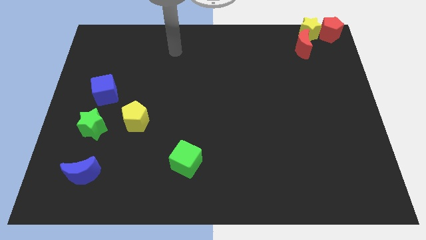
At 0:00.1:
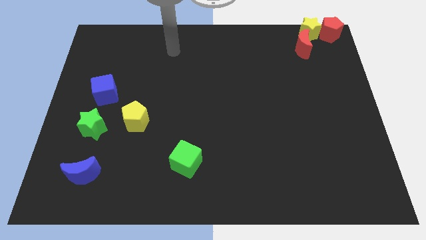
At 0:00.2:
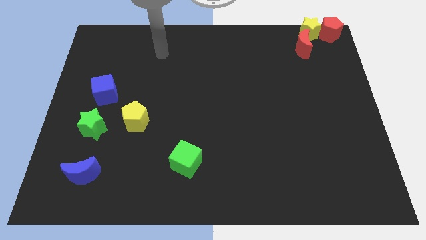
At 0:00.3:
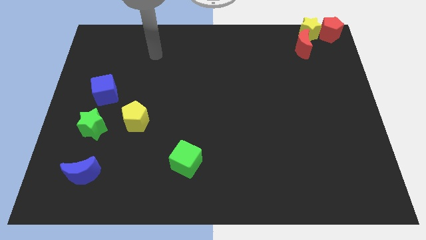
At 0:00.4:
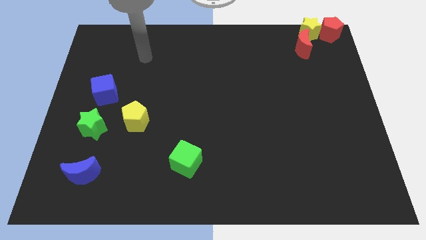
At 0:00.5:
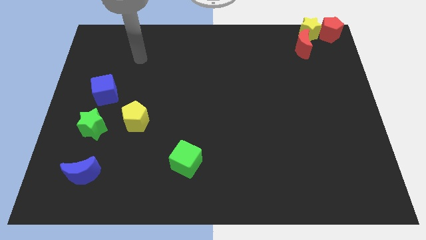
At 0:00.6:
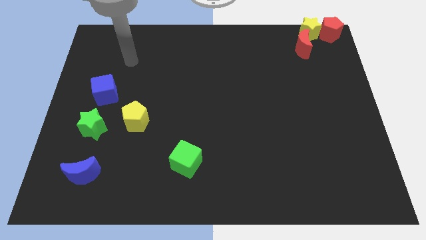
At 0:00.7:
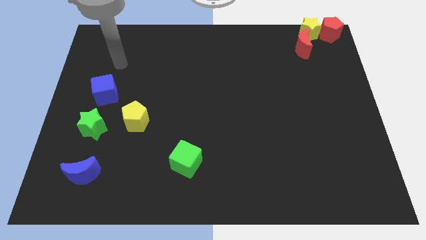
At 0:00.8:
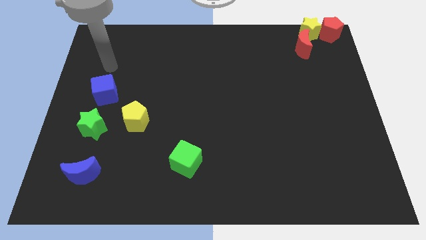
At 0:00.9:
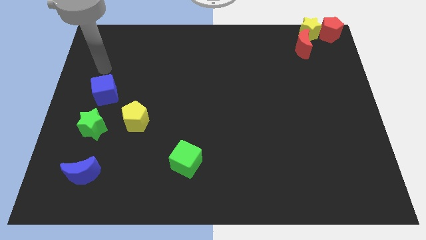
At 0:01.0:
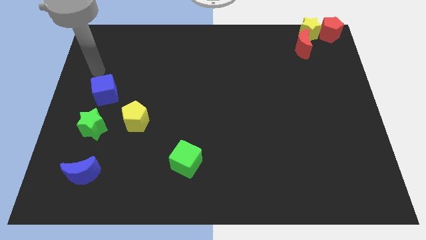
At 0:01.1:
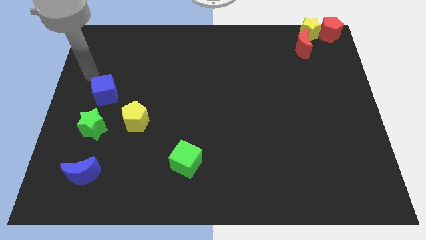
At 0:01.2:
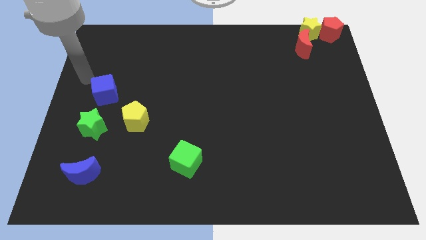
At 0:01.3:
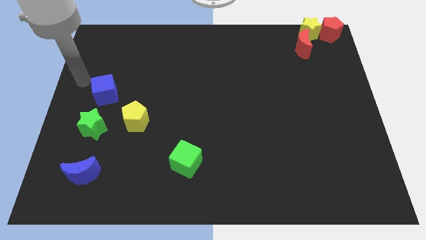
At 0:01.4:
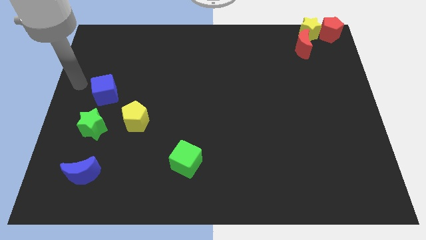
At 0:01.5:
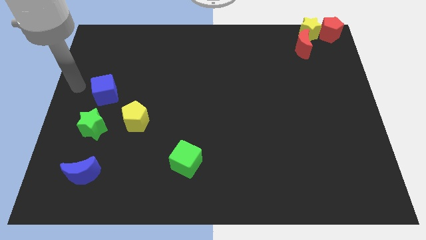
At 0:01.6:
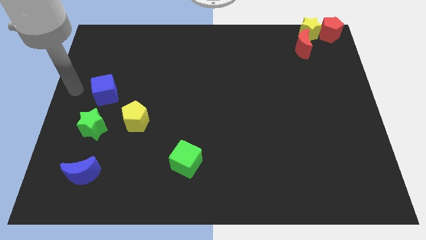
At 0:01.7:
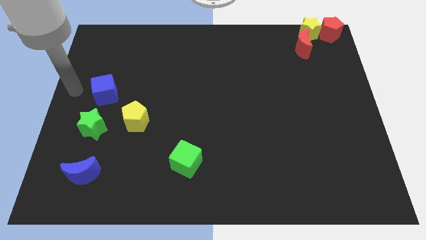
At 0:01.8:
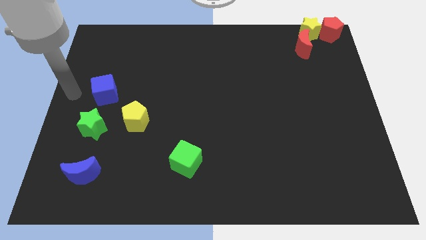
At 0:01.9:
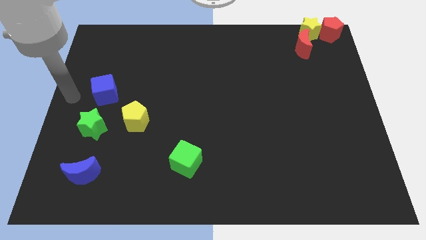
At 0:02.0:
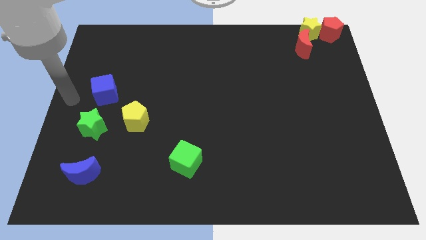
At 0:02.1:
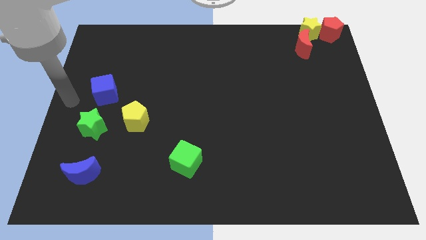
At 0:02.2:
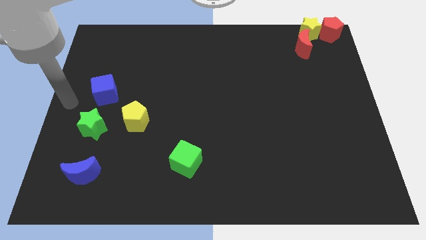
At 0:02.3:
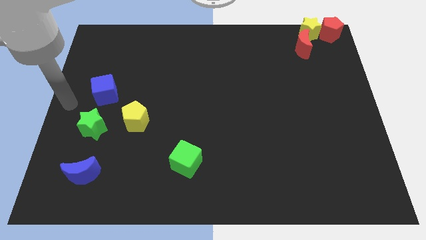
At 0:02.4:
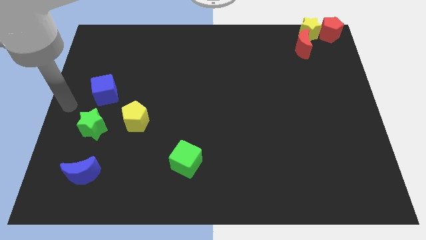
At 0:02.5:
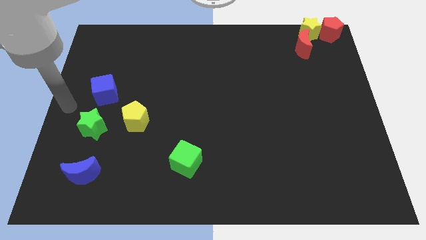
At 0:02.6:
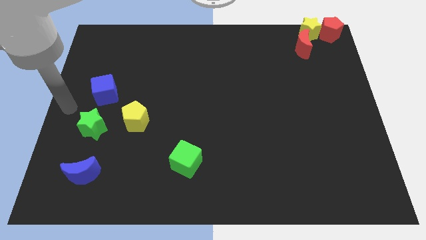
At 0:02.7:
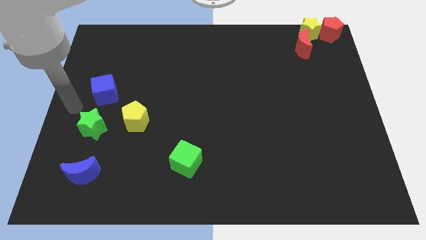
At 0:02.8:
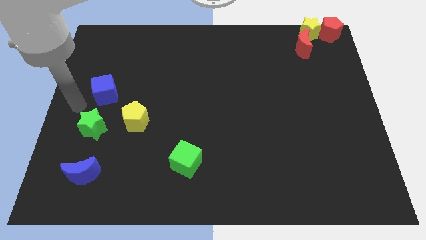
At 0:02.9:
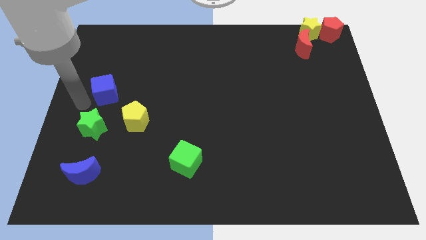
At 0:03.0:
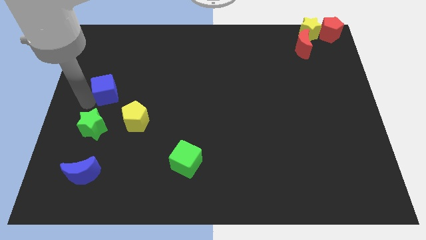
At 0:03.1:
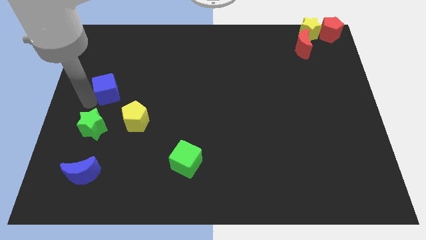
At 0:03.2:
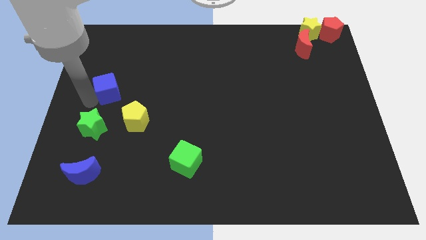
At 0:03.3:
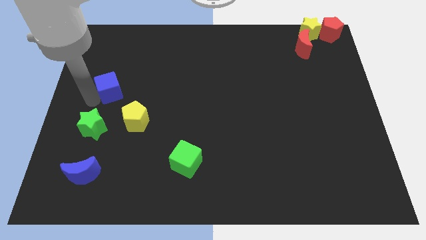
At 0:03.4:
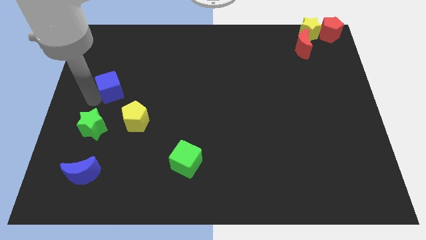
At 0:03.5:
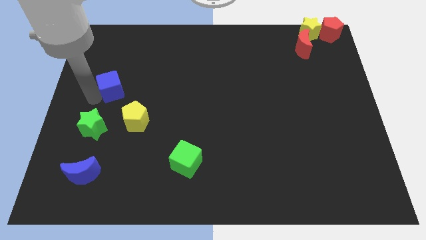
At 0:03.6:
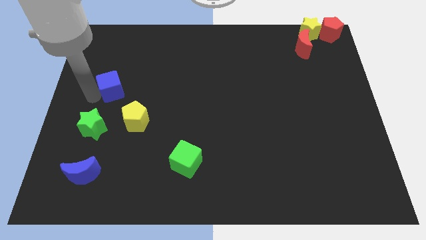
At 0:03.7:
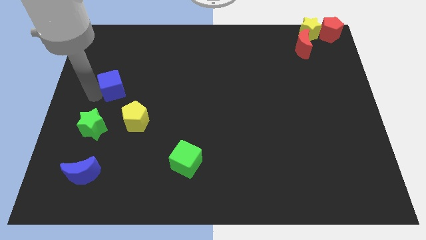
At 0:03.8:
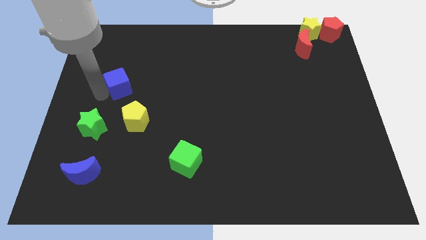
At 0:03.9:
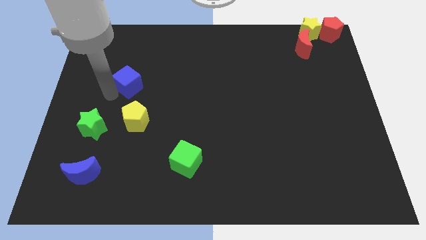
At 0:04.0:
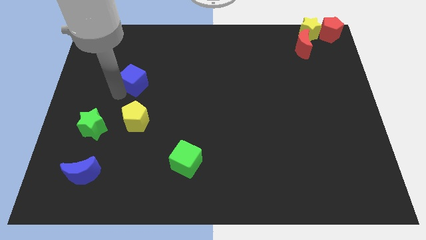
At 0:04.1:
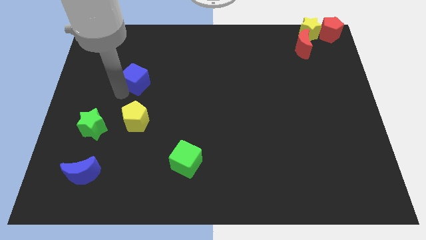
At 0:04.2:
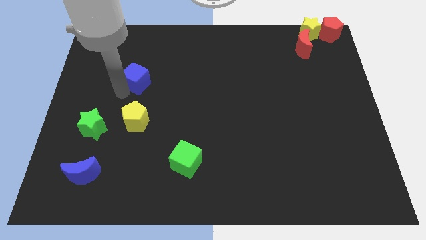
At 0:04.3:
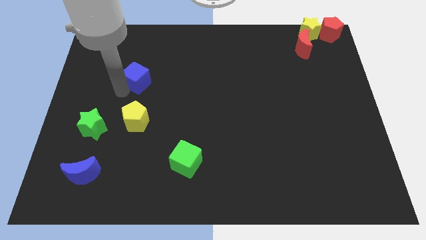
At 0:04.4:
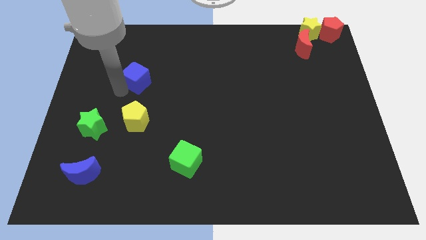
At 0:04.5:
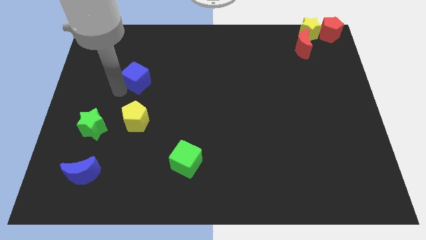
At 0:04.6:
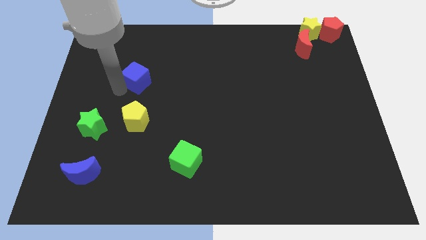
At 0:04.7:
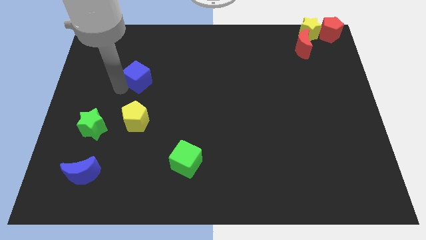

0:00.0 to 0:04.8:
place the blue cube above the yellow pentagon

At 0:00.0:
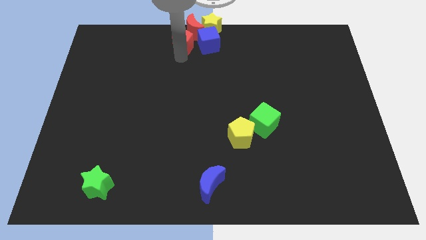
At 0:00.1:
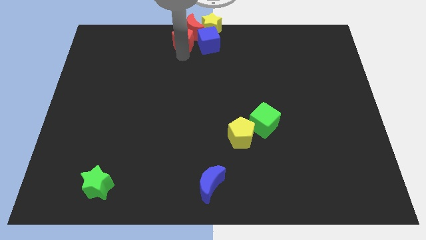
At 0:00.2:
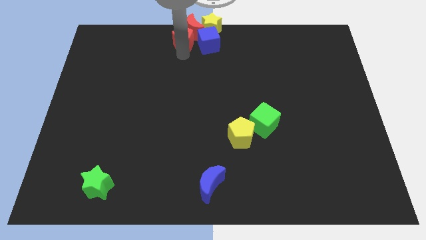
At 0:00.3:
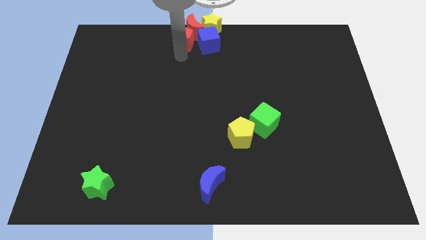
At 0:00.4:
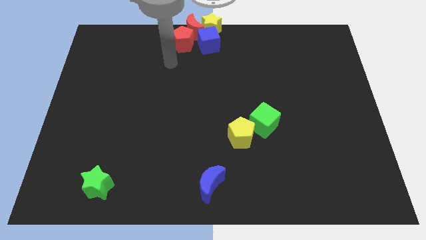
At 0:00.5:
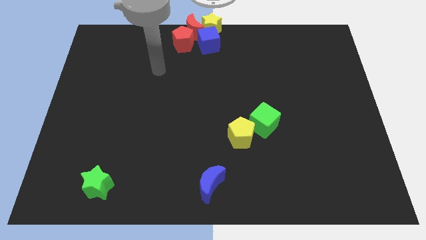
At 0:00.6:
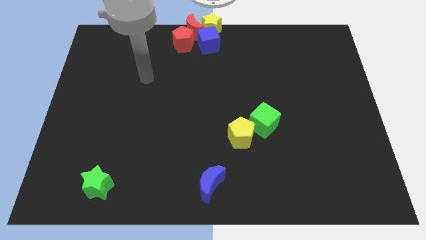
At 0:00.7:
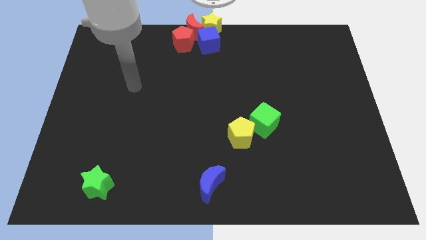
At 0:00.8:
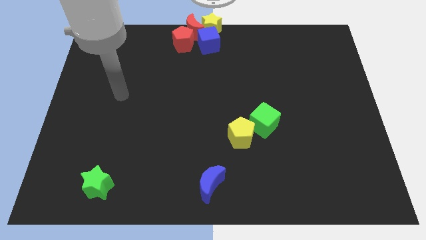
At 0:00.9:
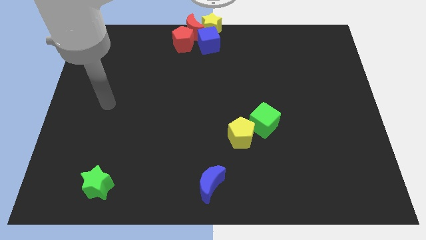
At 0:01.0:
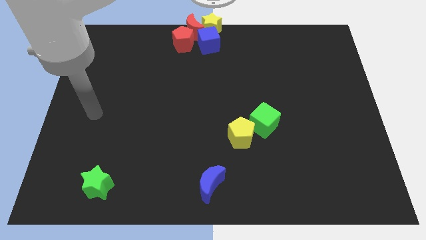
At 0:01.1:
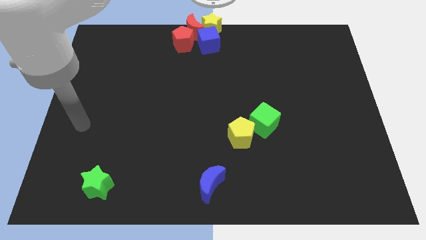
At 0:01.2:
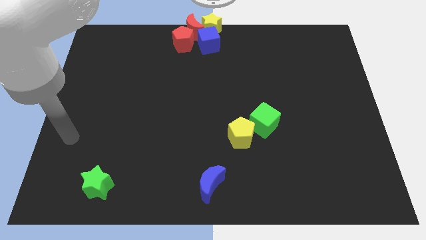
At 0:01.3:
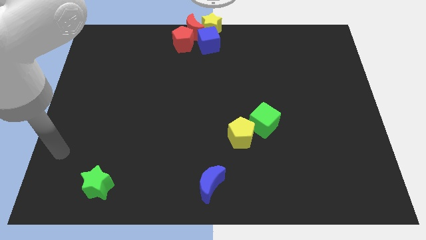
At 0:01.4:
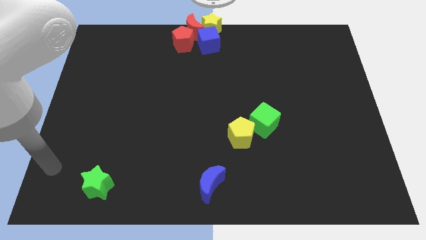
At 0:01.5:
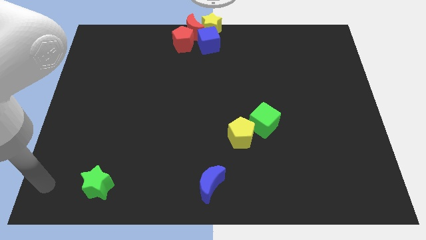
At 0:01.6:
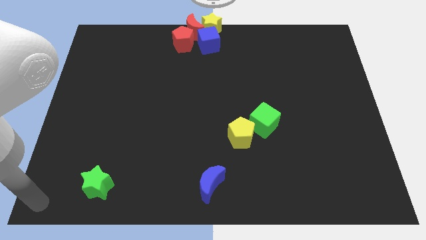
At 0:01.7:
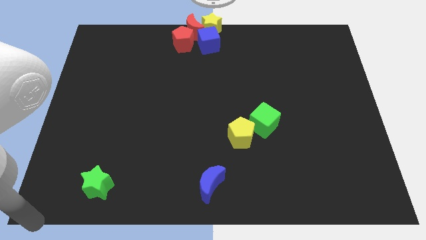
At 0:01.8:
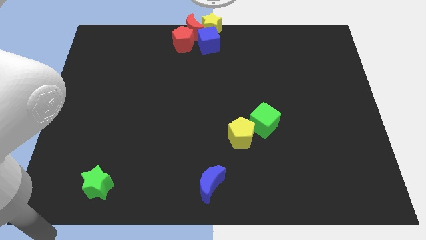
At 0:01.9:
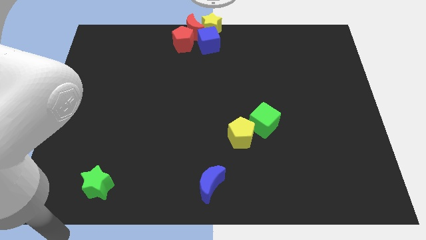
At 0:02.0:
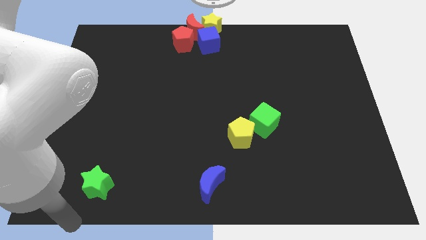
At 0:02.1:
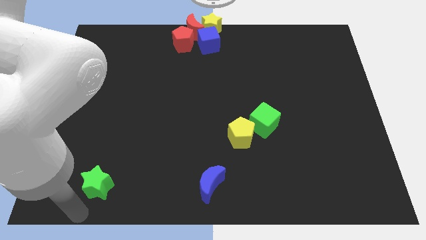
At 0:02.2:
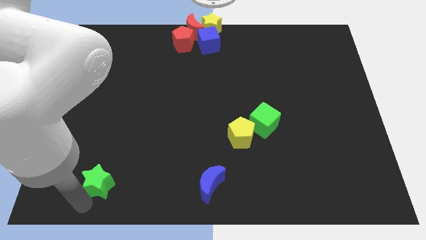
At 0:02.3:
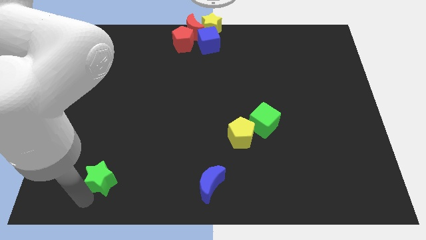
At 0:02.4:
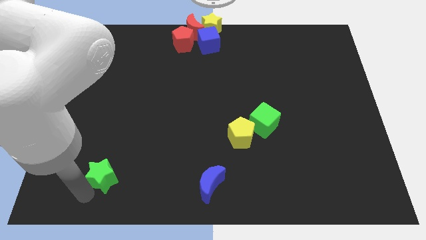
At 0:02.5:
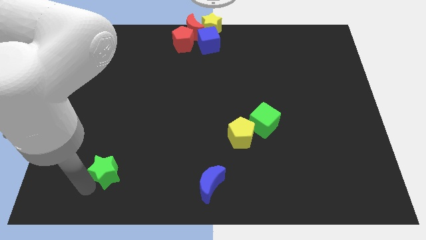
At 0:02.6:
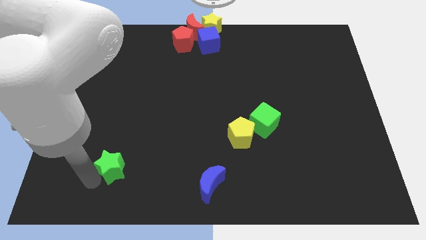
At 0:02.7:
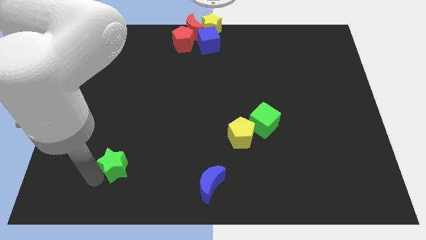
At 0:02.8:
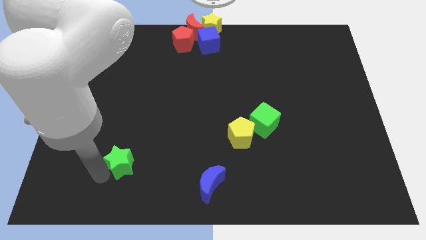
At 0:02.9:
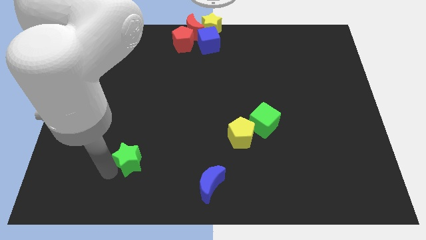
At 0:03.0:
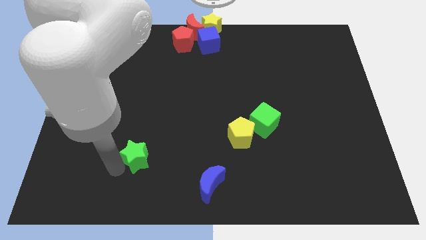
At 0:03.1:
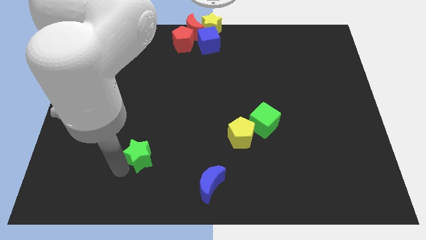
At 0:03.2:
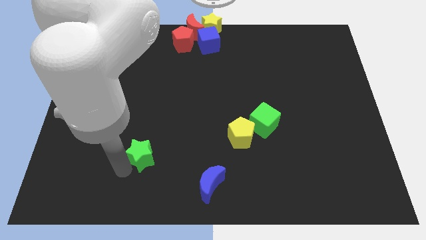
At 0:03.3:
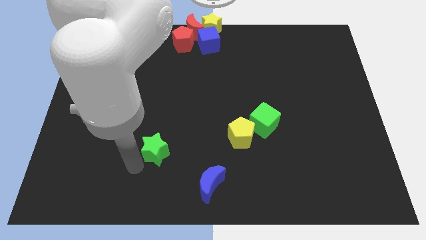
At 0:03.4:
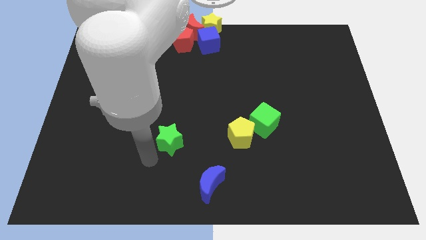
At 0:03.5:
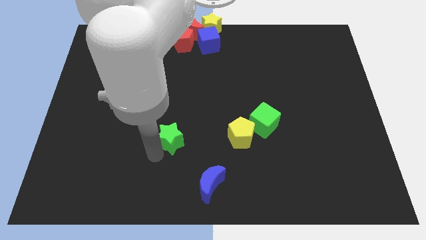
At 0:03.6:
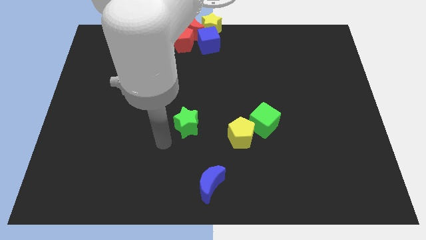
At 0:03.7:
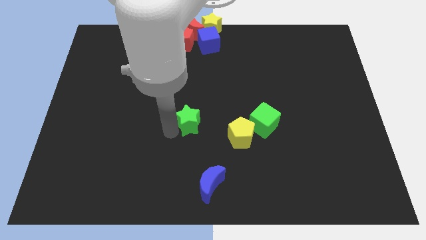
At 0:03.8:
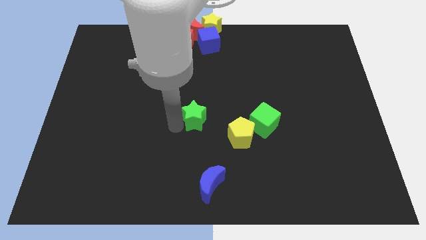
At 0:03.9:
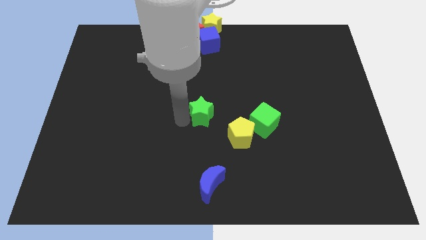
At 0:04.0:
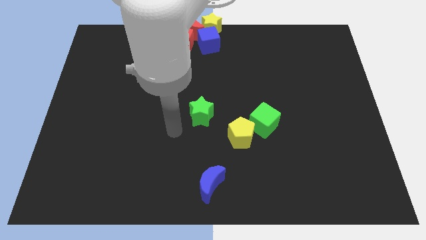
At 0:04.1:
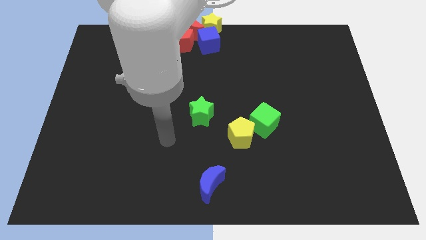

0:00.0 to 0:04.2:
place the green star diagonal to the yellow pentagon
